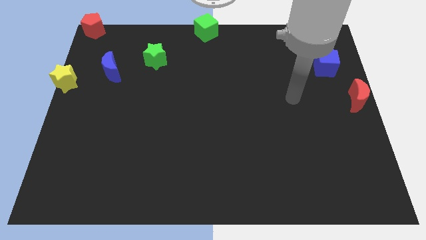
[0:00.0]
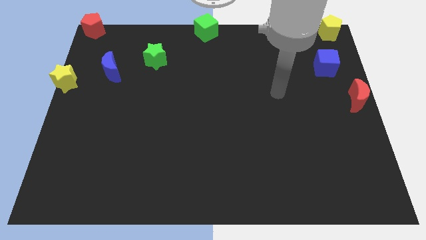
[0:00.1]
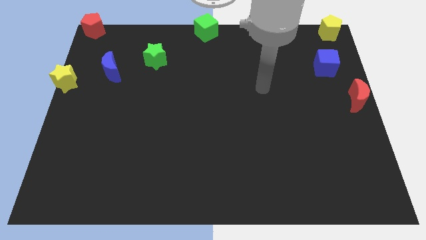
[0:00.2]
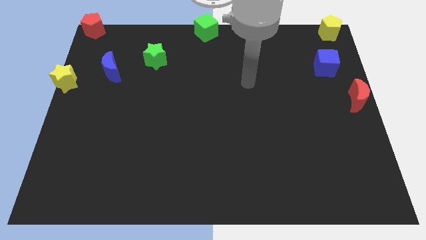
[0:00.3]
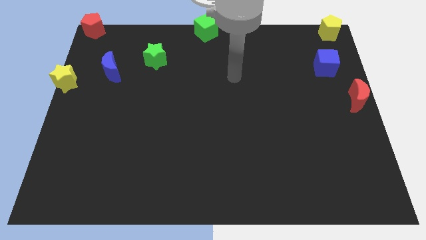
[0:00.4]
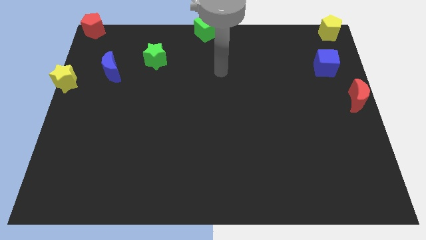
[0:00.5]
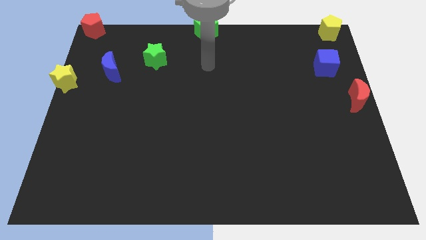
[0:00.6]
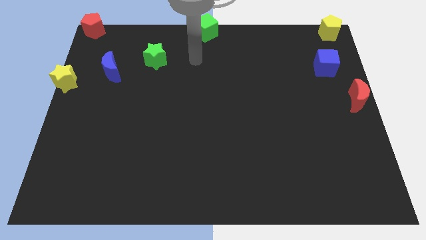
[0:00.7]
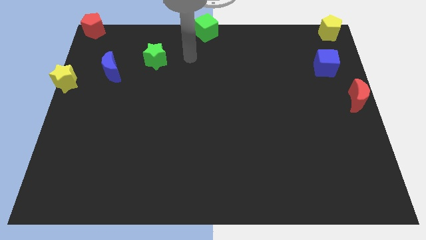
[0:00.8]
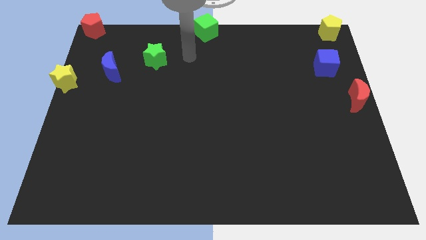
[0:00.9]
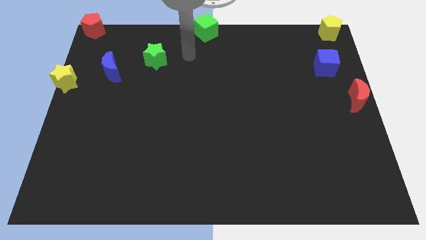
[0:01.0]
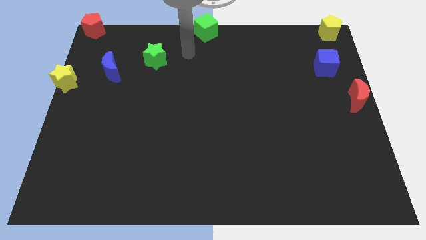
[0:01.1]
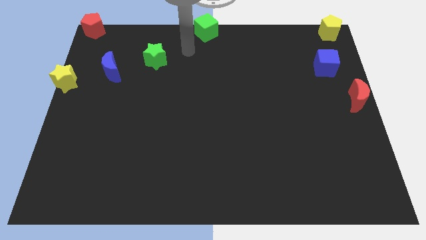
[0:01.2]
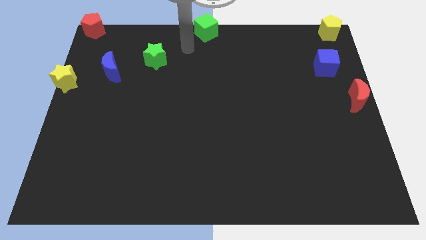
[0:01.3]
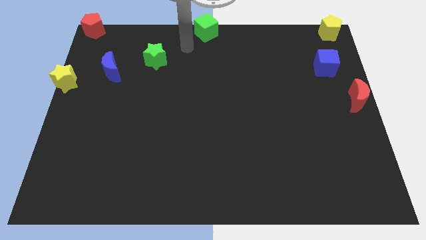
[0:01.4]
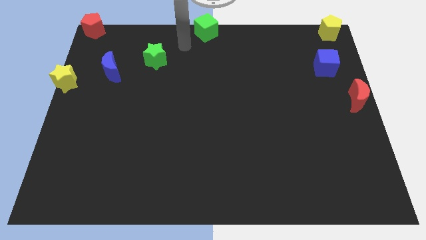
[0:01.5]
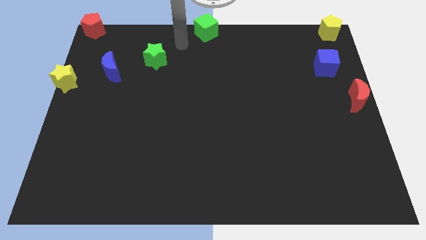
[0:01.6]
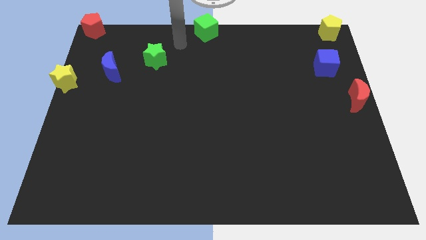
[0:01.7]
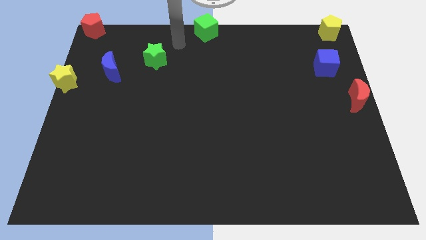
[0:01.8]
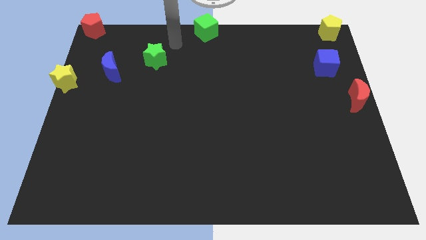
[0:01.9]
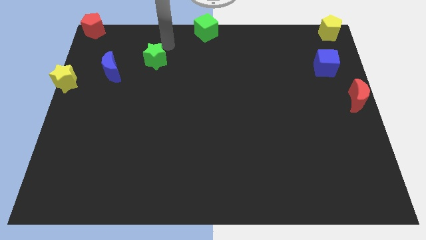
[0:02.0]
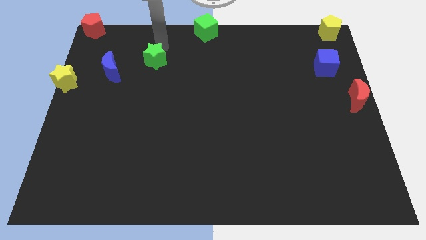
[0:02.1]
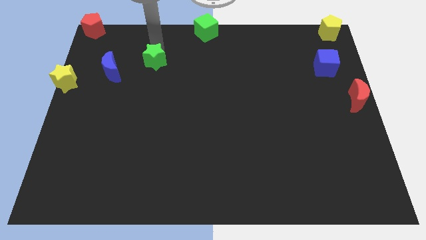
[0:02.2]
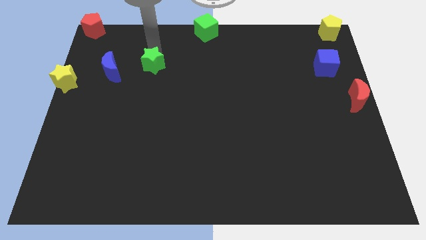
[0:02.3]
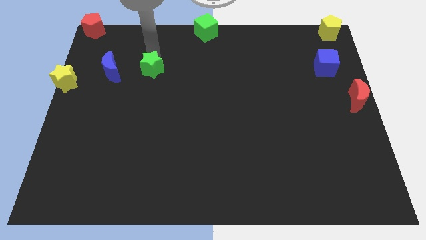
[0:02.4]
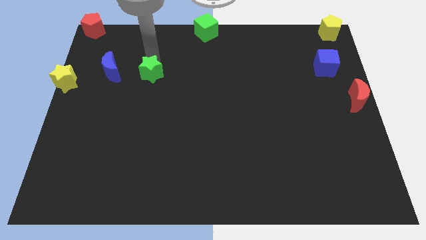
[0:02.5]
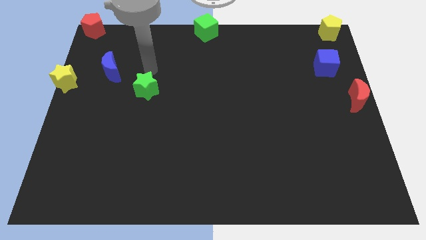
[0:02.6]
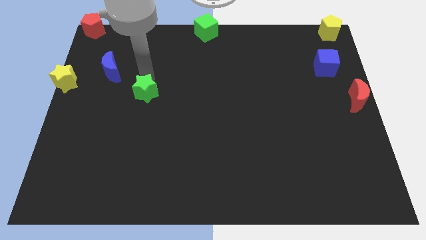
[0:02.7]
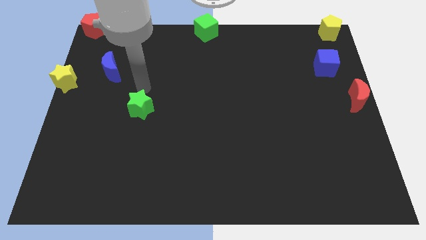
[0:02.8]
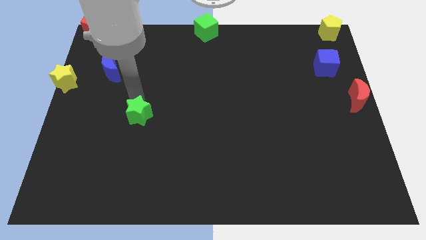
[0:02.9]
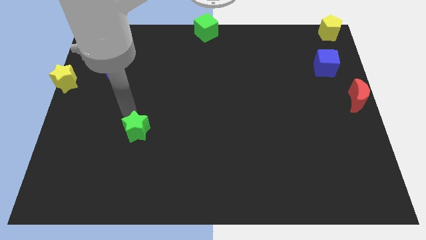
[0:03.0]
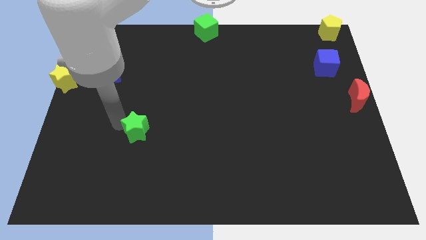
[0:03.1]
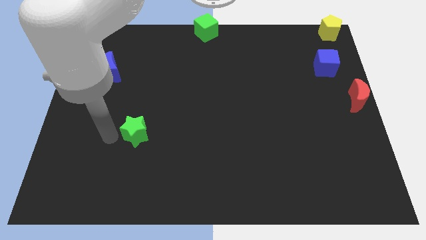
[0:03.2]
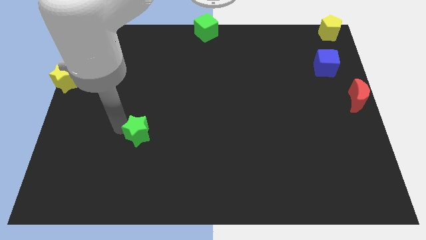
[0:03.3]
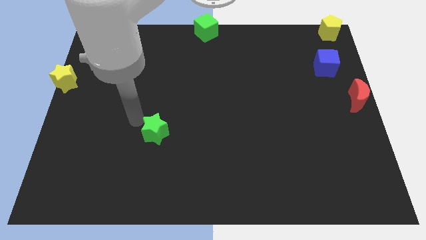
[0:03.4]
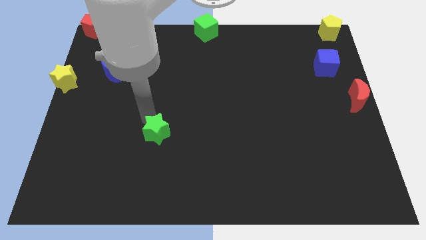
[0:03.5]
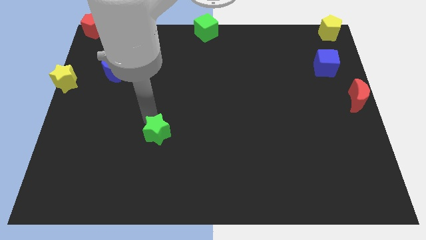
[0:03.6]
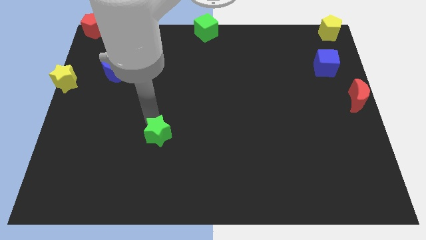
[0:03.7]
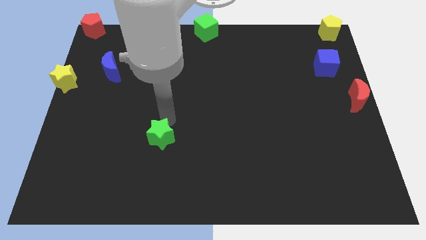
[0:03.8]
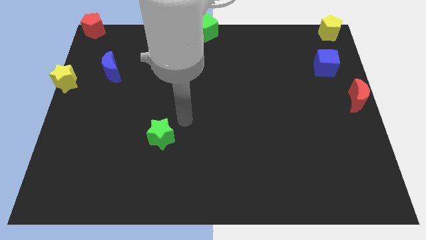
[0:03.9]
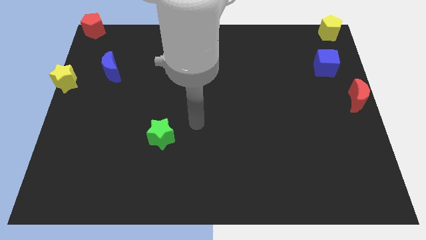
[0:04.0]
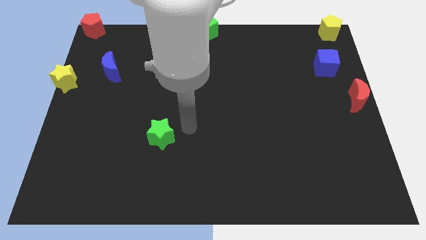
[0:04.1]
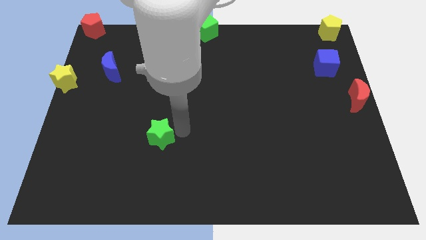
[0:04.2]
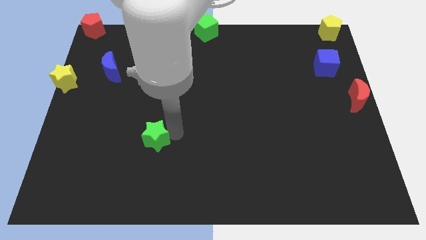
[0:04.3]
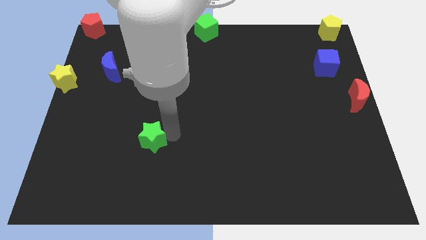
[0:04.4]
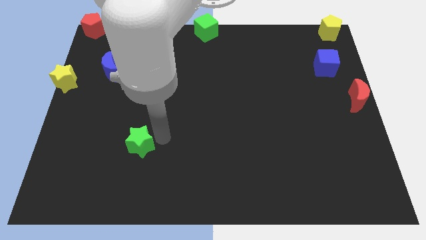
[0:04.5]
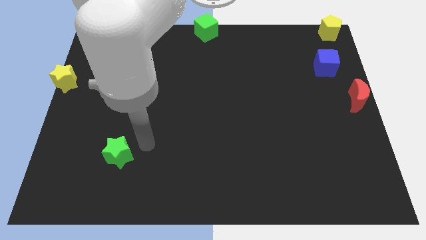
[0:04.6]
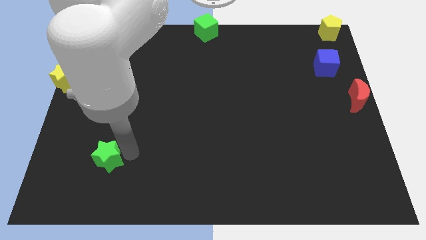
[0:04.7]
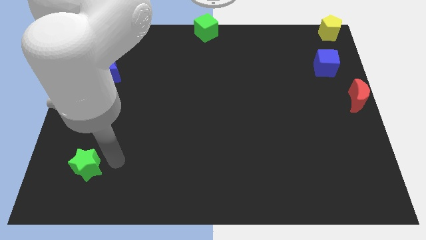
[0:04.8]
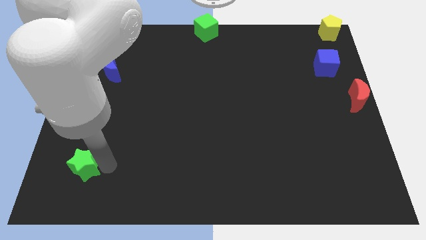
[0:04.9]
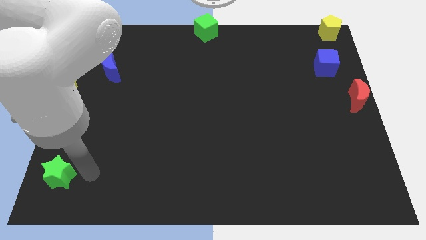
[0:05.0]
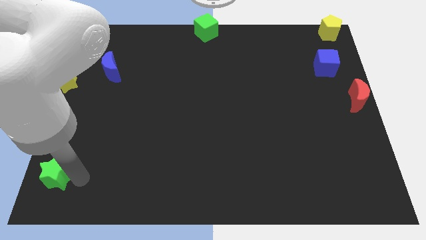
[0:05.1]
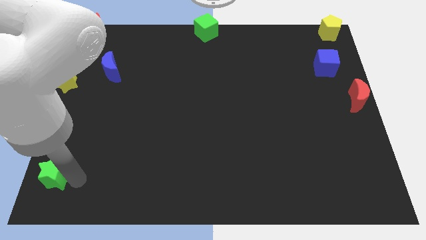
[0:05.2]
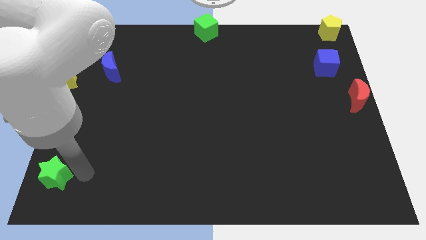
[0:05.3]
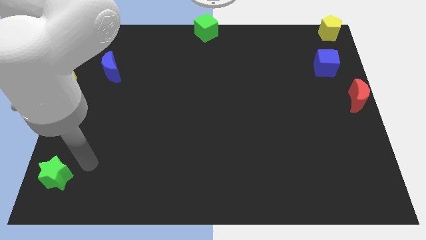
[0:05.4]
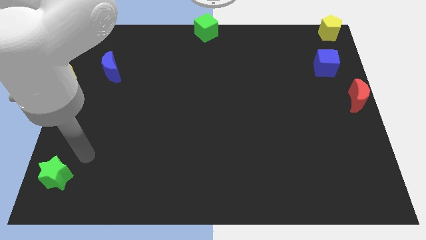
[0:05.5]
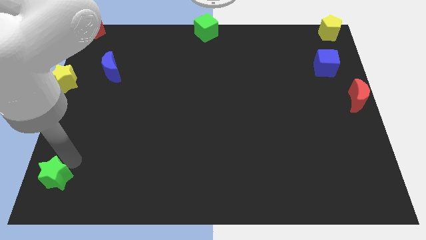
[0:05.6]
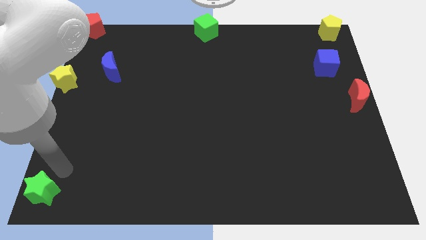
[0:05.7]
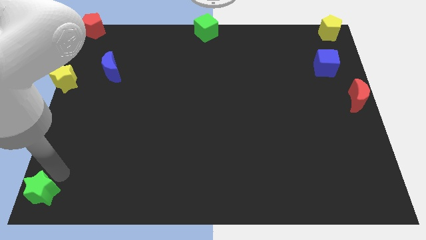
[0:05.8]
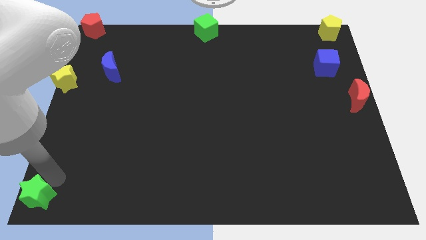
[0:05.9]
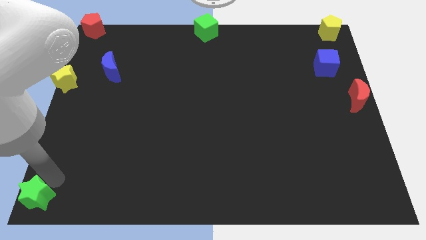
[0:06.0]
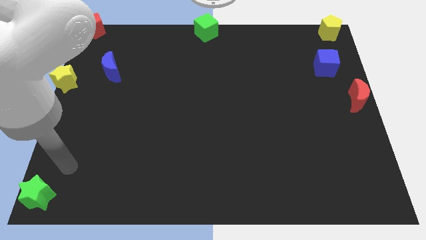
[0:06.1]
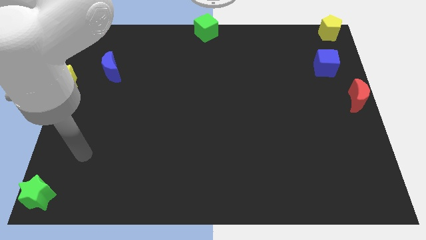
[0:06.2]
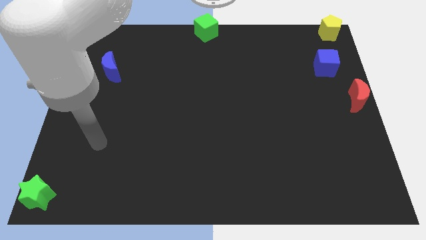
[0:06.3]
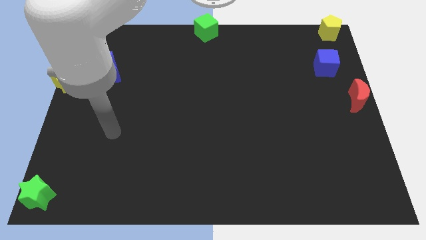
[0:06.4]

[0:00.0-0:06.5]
move the green star to the bottom left corner of the board

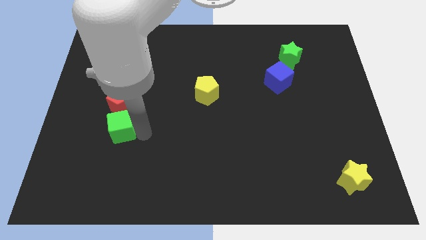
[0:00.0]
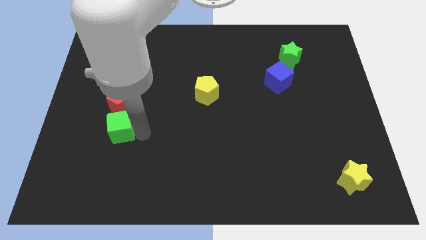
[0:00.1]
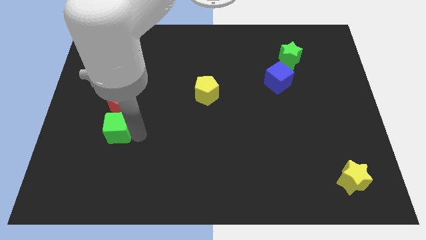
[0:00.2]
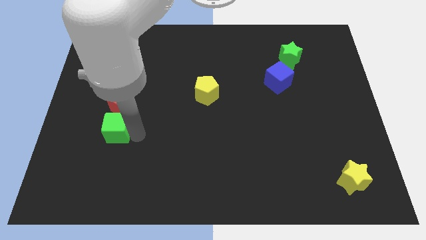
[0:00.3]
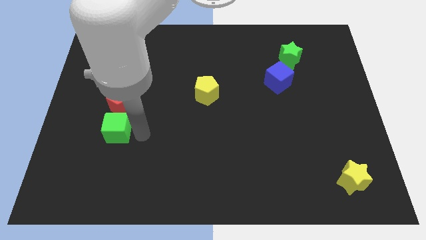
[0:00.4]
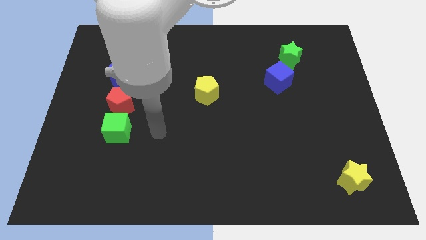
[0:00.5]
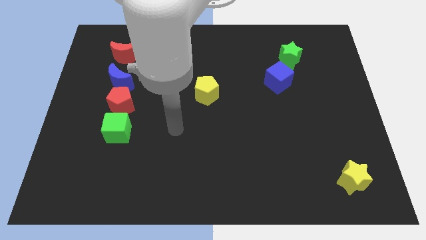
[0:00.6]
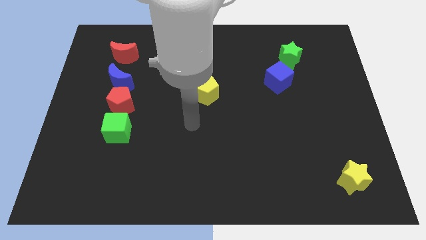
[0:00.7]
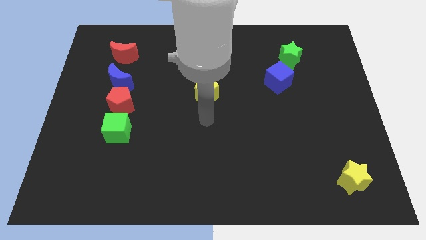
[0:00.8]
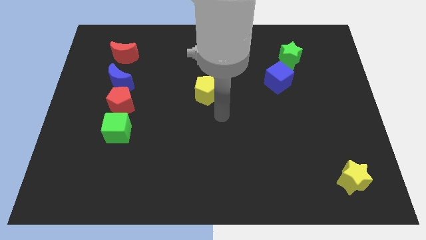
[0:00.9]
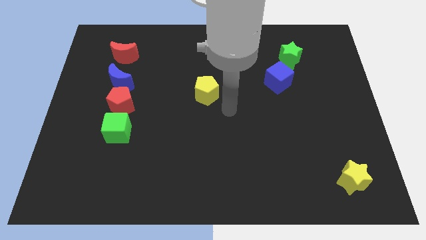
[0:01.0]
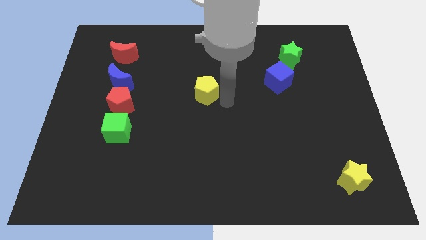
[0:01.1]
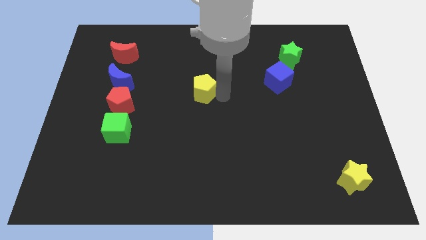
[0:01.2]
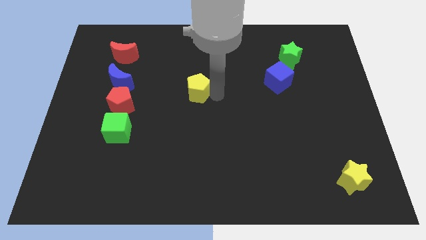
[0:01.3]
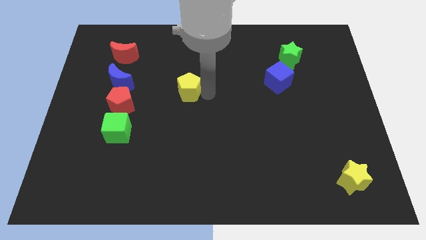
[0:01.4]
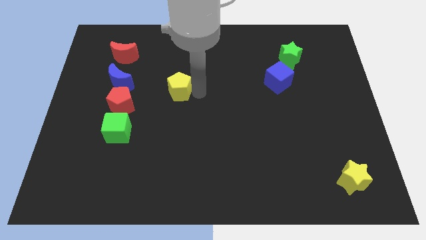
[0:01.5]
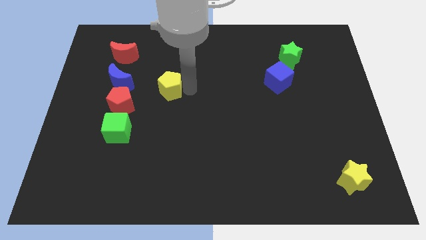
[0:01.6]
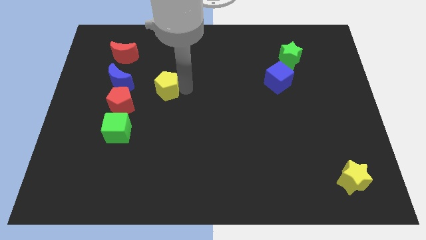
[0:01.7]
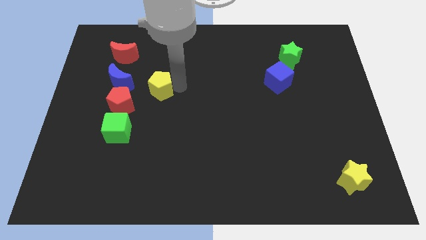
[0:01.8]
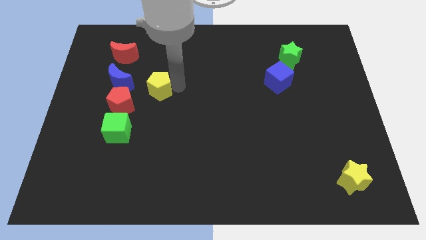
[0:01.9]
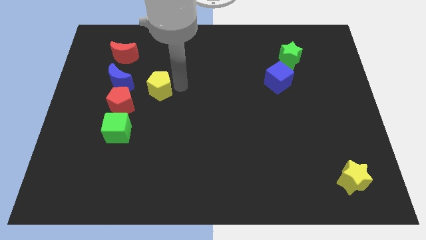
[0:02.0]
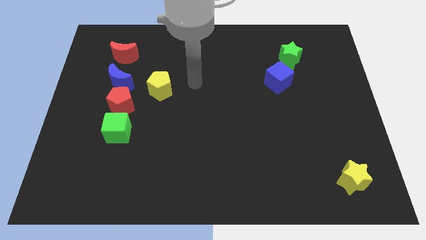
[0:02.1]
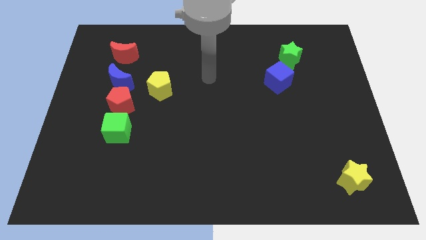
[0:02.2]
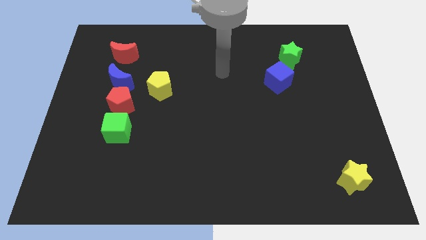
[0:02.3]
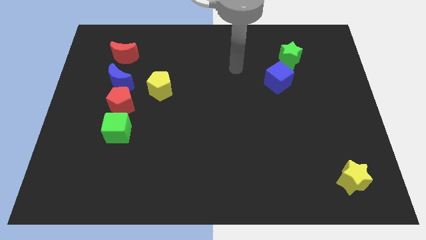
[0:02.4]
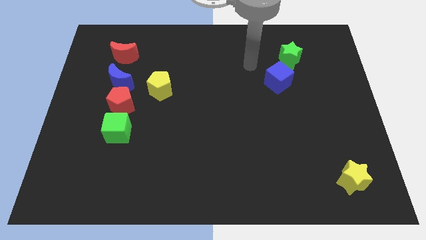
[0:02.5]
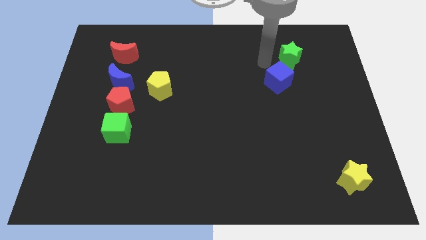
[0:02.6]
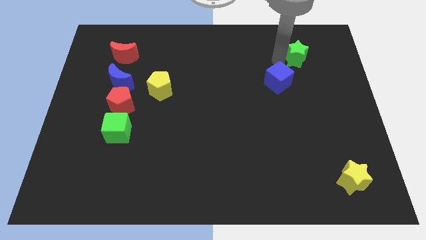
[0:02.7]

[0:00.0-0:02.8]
place the yellow pentagon right to the blue moon
